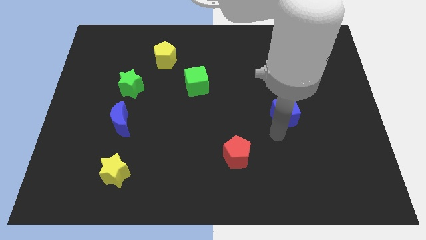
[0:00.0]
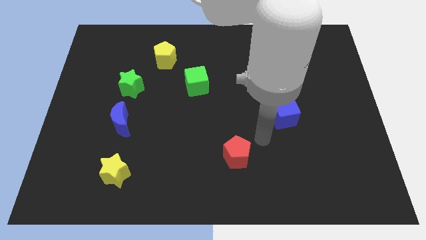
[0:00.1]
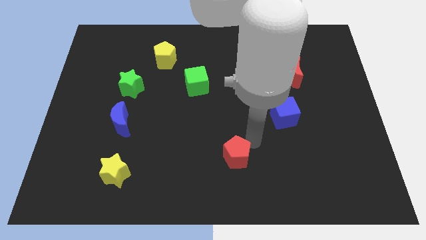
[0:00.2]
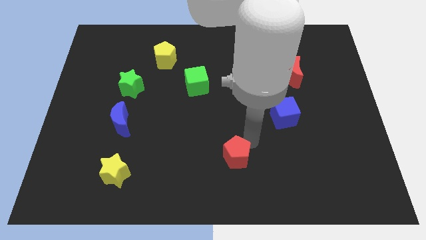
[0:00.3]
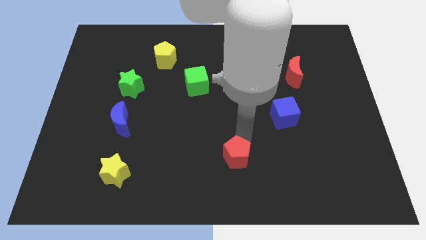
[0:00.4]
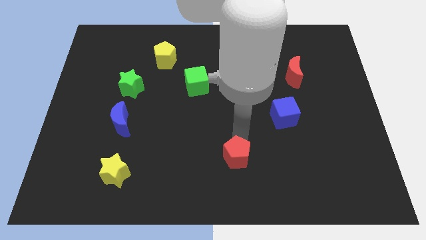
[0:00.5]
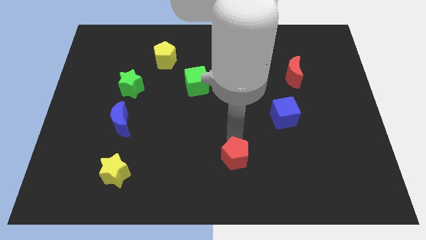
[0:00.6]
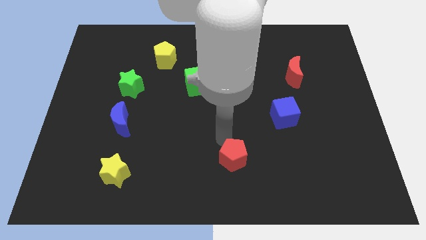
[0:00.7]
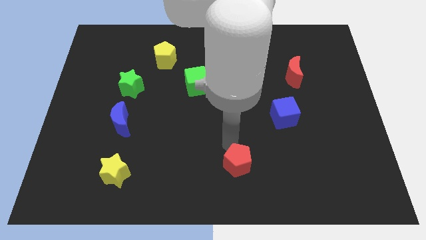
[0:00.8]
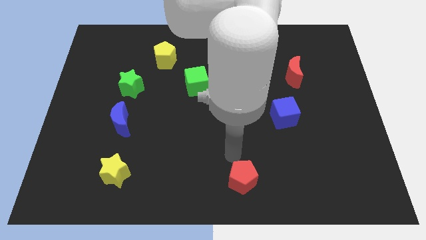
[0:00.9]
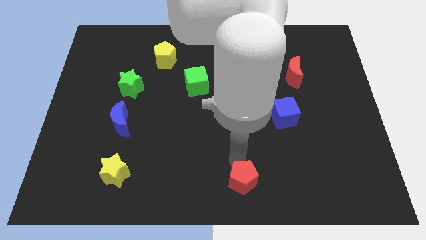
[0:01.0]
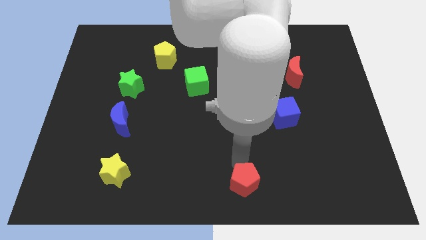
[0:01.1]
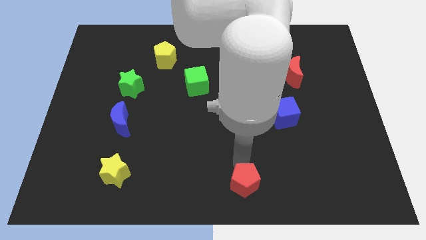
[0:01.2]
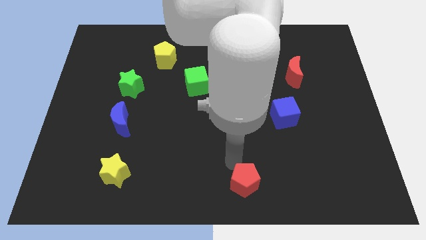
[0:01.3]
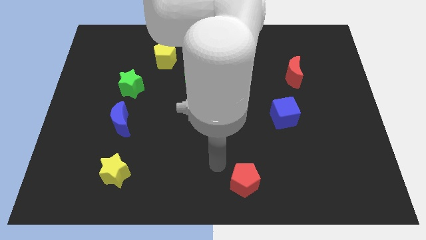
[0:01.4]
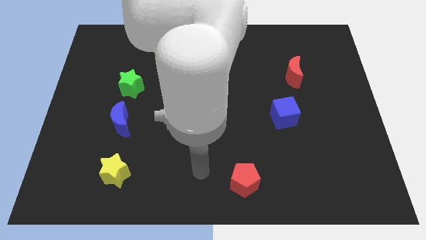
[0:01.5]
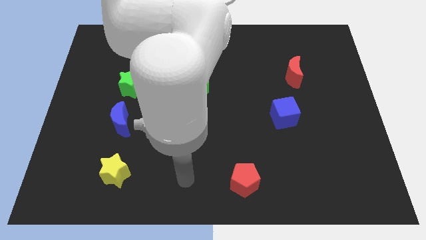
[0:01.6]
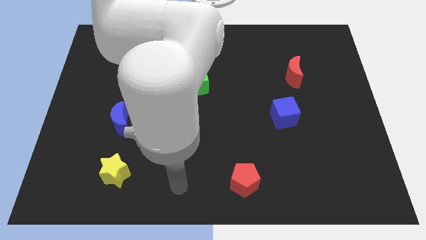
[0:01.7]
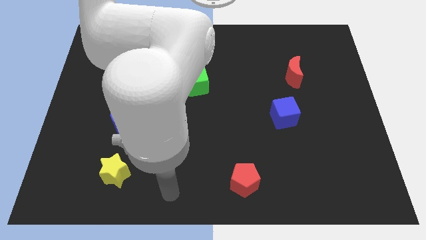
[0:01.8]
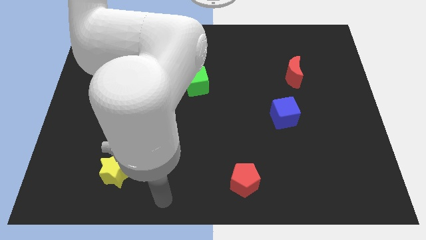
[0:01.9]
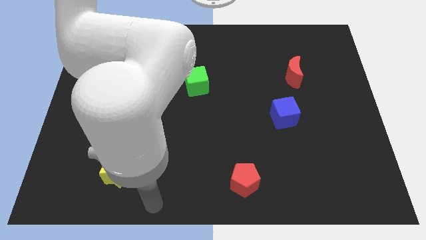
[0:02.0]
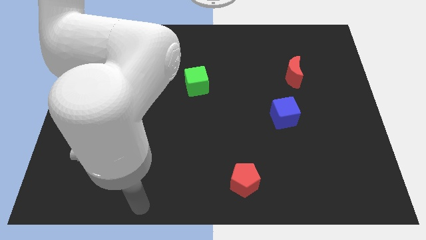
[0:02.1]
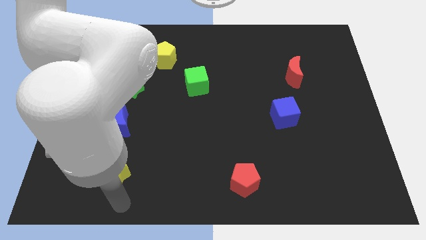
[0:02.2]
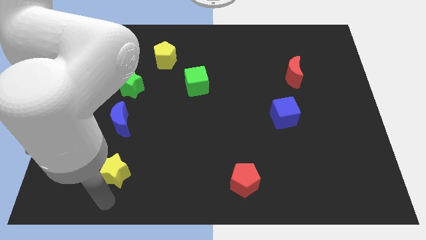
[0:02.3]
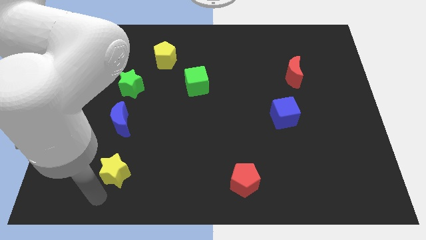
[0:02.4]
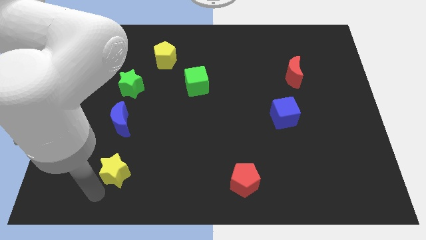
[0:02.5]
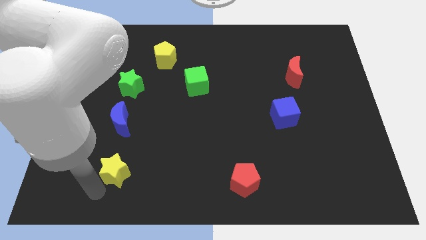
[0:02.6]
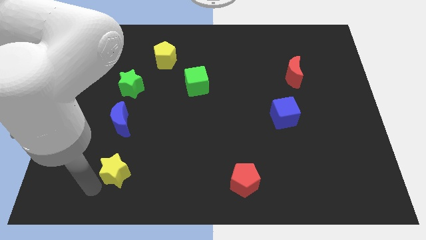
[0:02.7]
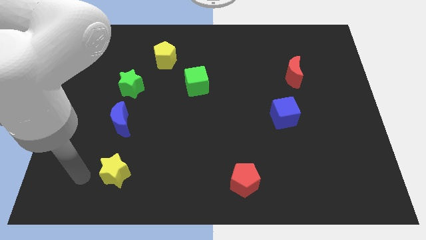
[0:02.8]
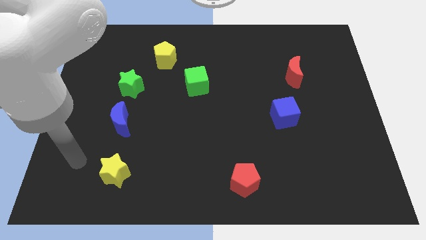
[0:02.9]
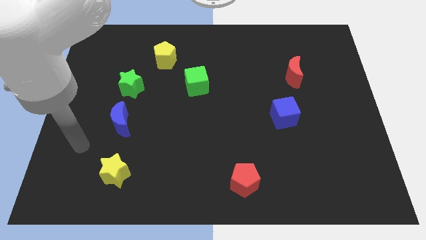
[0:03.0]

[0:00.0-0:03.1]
move the red pentagon to the bottom center

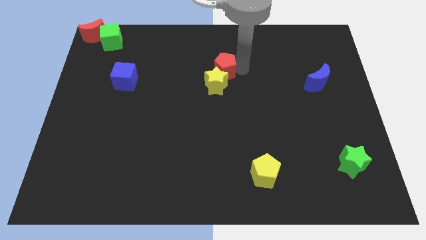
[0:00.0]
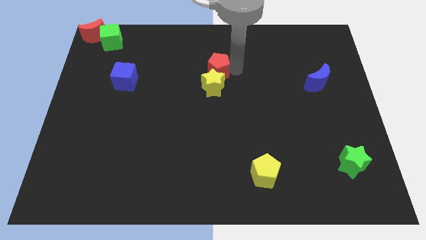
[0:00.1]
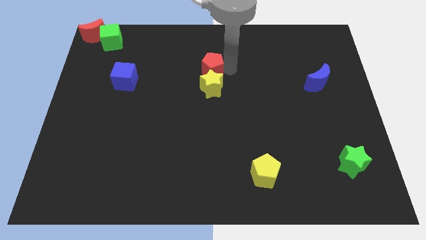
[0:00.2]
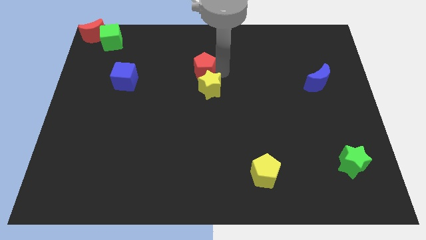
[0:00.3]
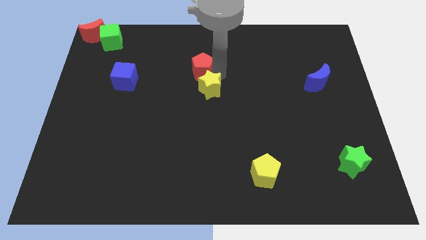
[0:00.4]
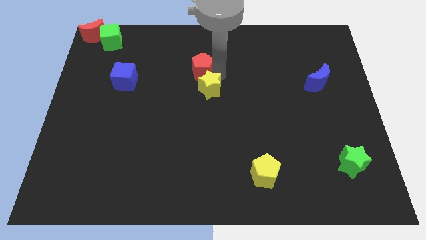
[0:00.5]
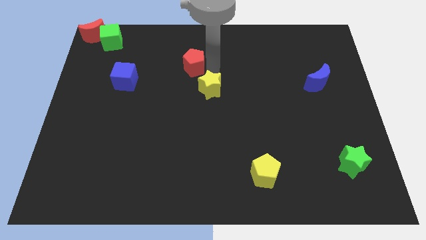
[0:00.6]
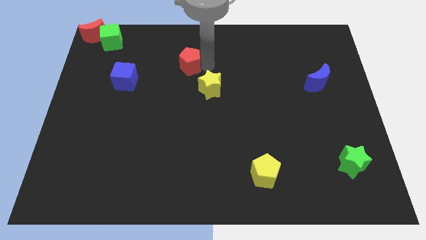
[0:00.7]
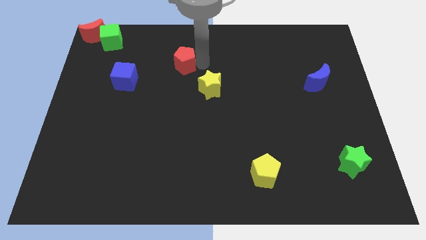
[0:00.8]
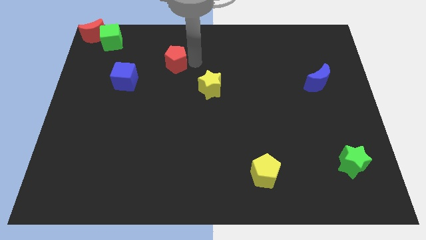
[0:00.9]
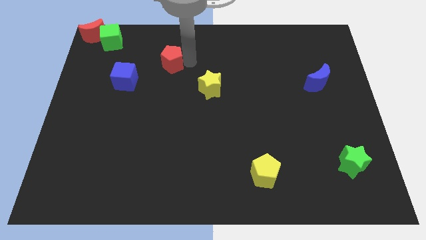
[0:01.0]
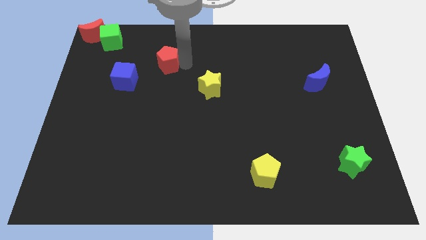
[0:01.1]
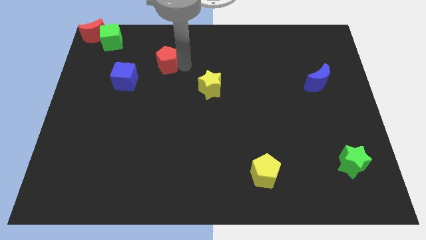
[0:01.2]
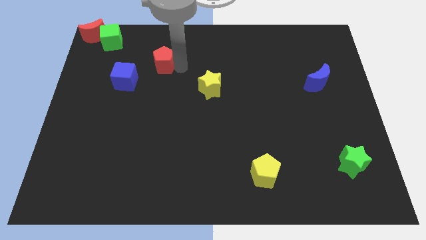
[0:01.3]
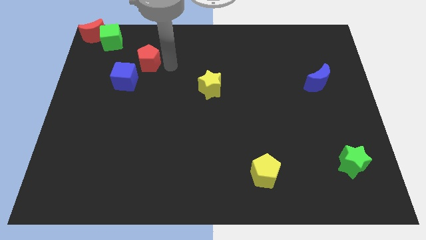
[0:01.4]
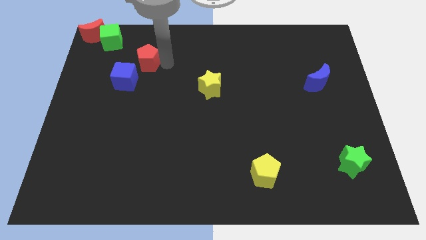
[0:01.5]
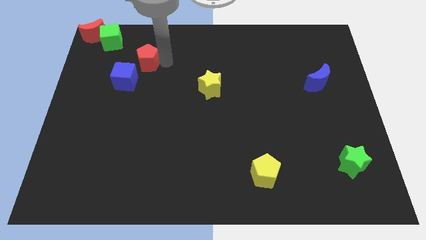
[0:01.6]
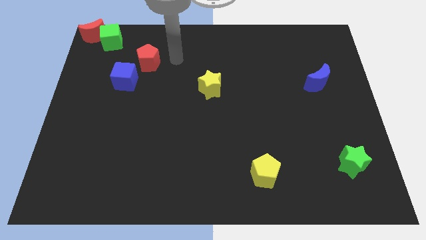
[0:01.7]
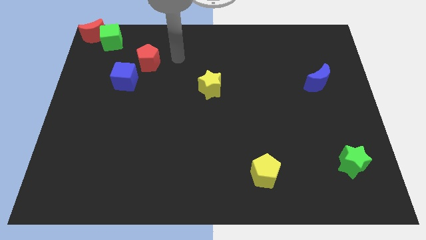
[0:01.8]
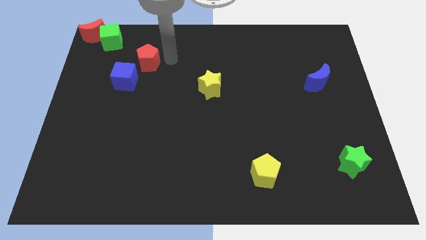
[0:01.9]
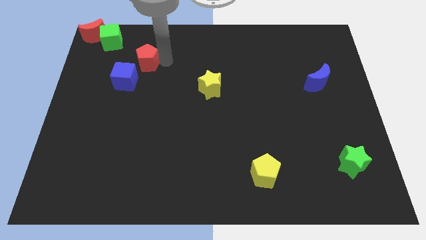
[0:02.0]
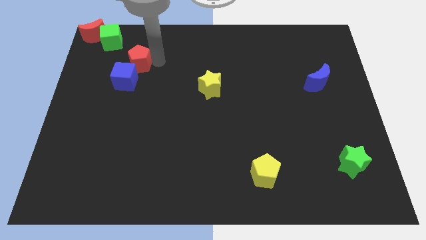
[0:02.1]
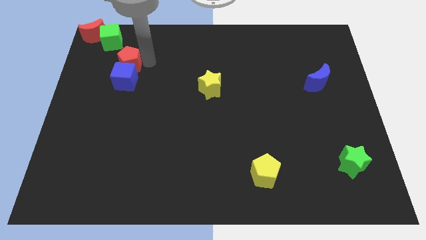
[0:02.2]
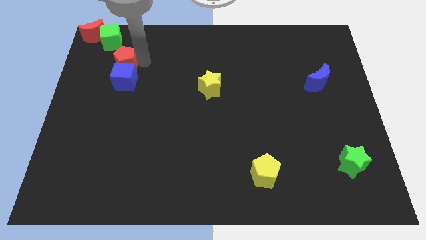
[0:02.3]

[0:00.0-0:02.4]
place the red pentagon above the blue cube

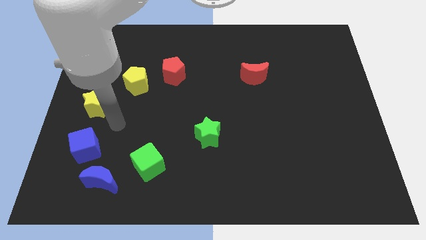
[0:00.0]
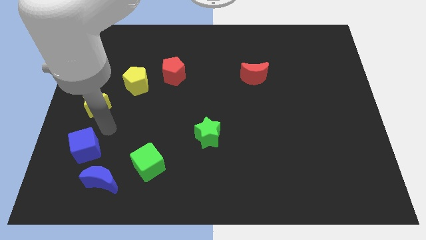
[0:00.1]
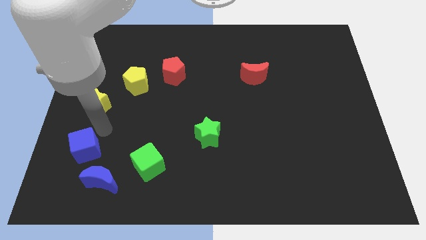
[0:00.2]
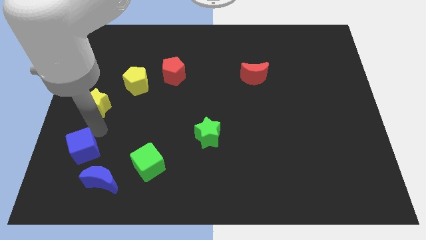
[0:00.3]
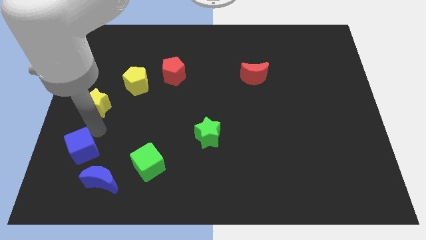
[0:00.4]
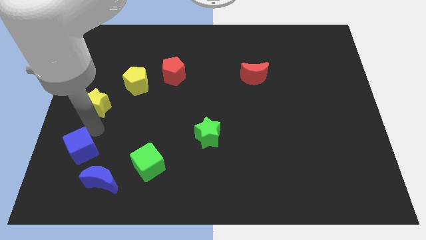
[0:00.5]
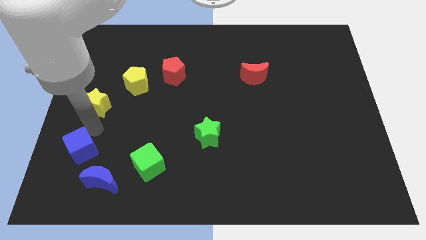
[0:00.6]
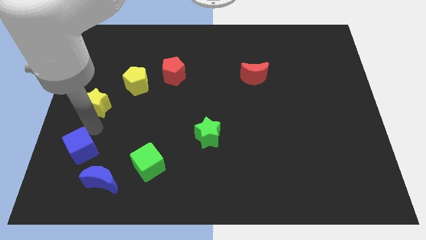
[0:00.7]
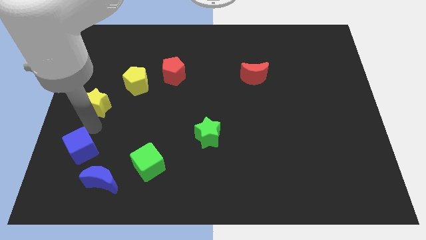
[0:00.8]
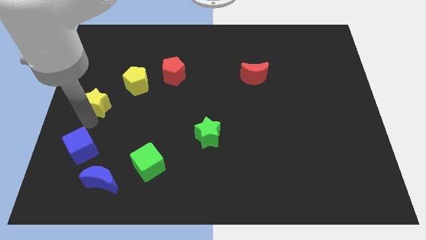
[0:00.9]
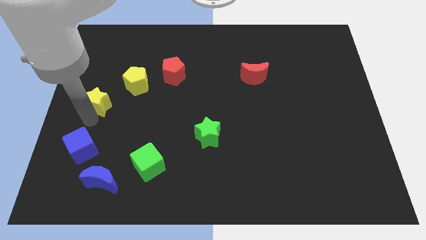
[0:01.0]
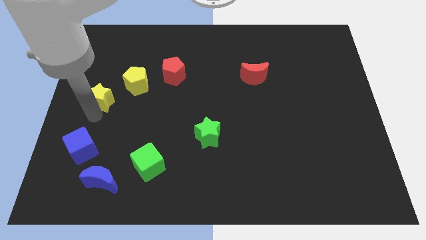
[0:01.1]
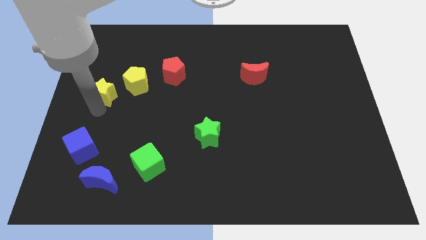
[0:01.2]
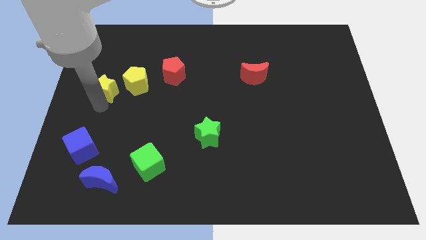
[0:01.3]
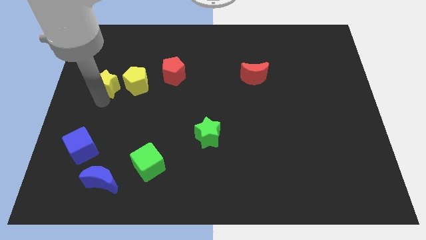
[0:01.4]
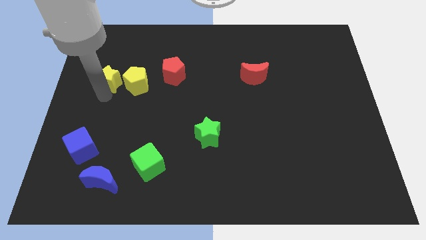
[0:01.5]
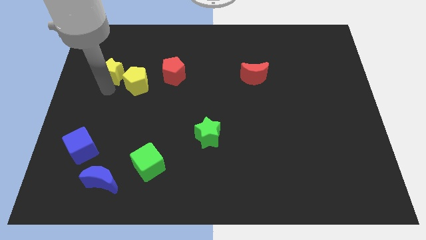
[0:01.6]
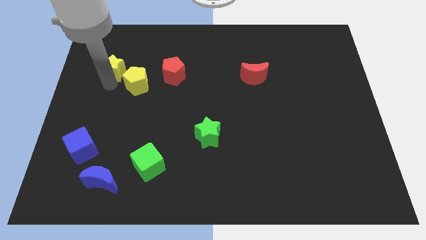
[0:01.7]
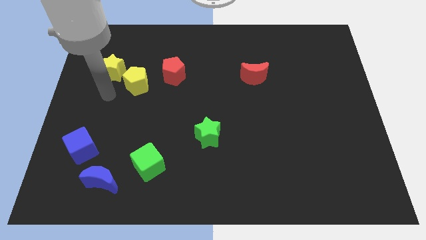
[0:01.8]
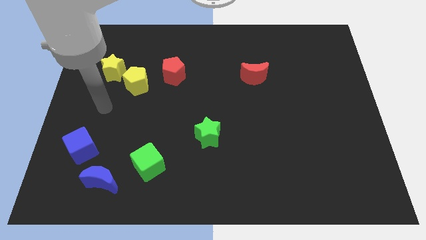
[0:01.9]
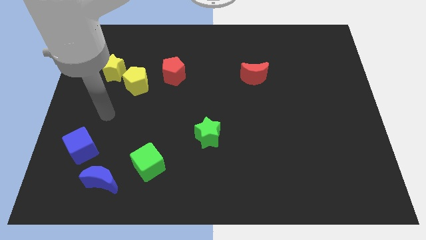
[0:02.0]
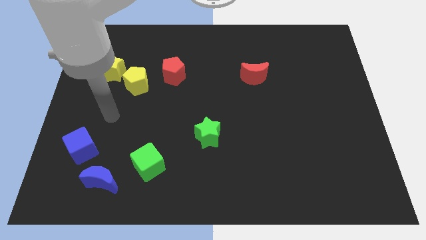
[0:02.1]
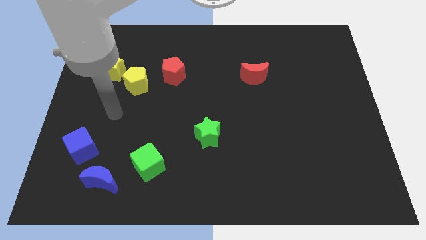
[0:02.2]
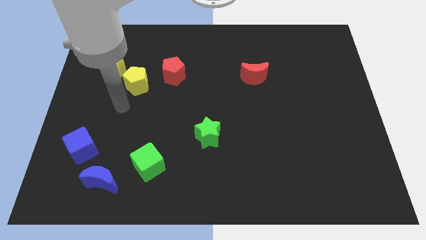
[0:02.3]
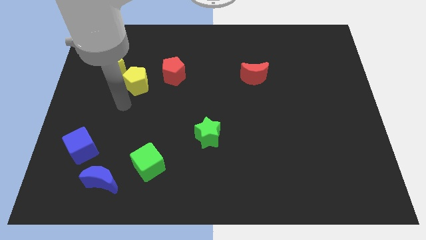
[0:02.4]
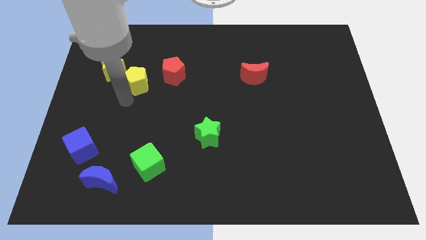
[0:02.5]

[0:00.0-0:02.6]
move the yellow star towards the top

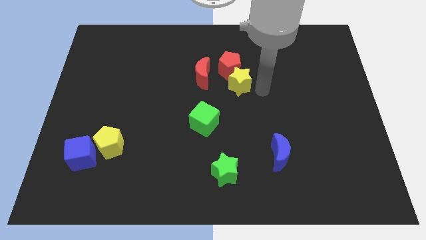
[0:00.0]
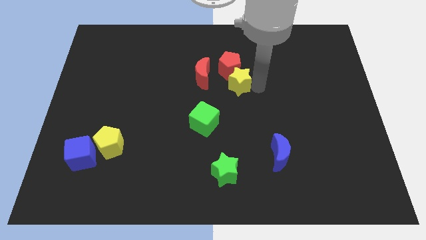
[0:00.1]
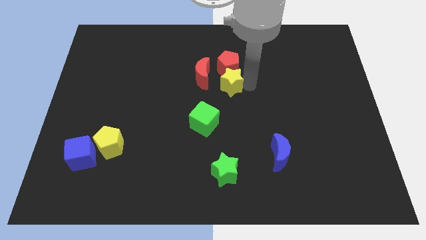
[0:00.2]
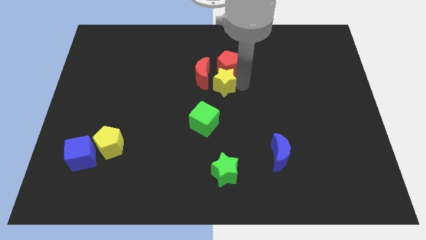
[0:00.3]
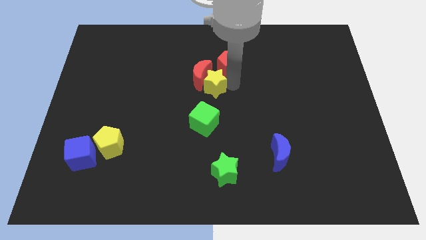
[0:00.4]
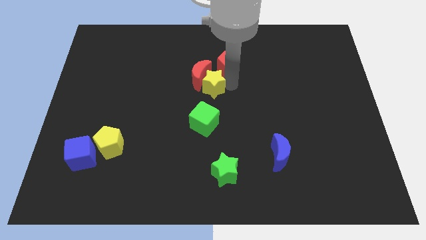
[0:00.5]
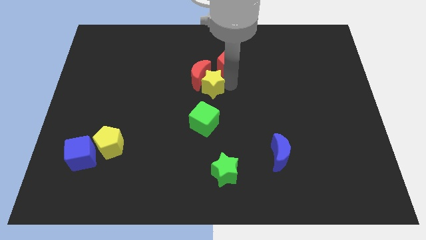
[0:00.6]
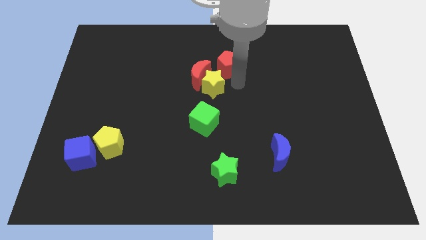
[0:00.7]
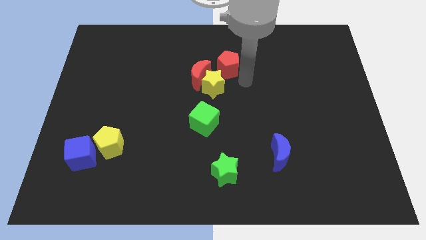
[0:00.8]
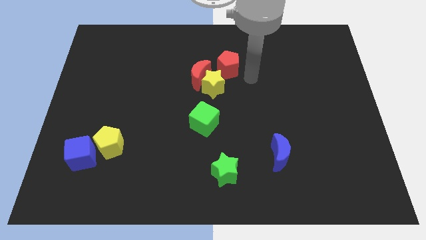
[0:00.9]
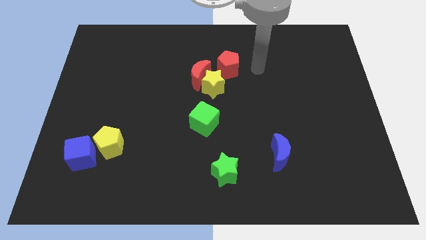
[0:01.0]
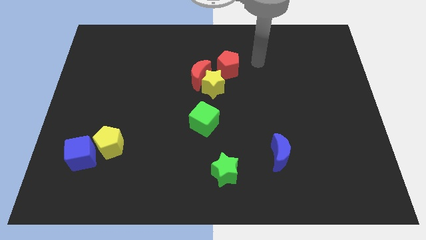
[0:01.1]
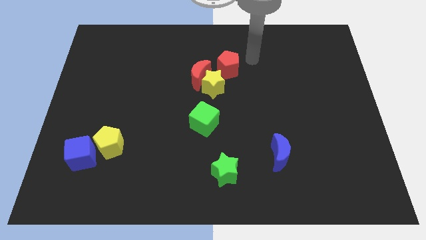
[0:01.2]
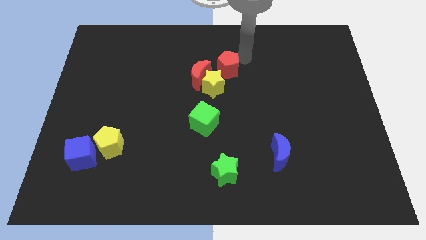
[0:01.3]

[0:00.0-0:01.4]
place yellow star in between red moon and red pentagon
